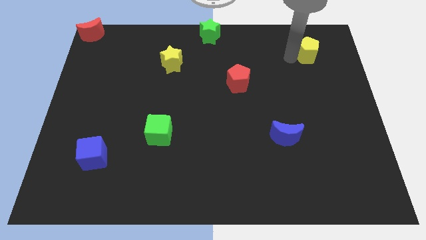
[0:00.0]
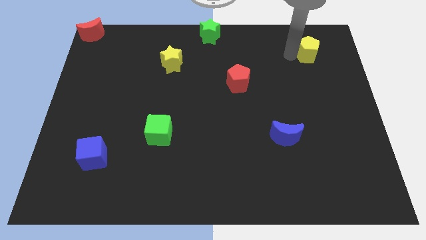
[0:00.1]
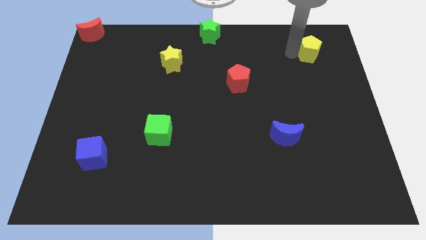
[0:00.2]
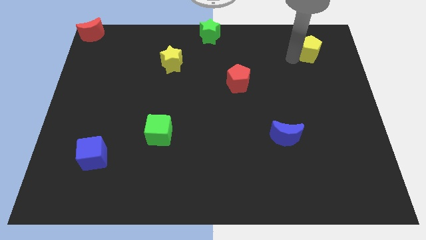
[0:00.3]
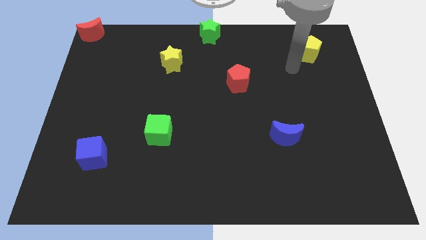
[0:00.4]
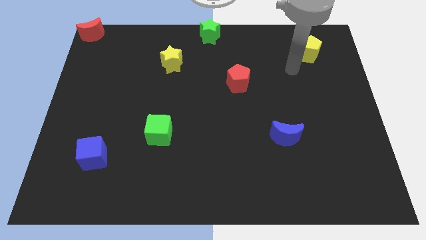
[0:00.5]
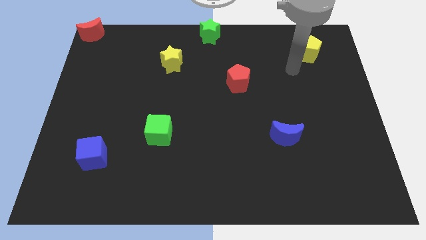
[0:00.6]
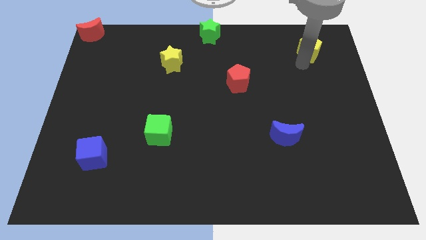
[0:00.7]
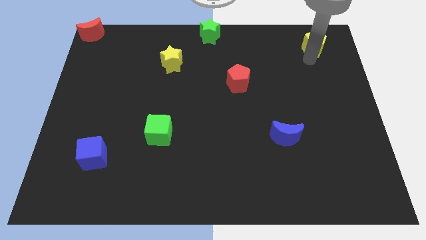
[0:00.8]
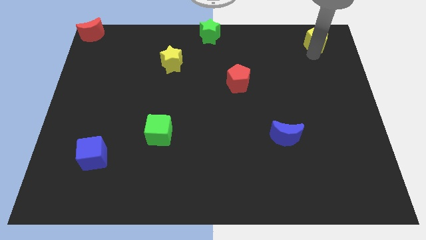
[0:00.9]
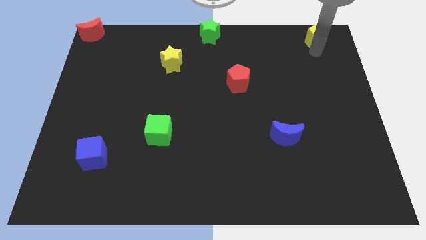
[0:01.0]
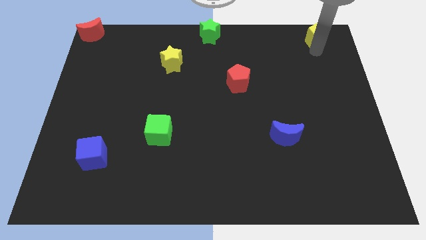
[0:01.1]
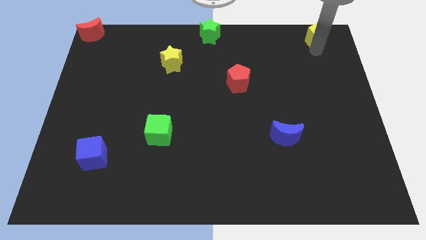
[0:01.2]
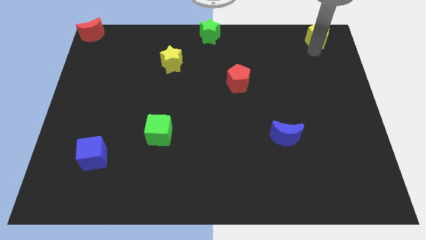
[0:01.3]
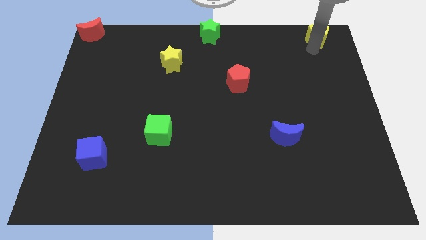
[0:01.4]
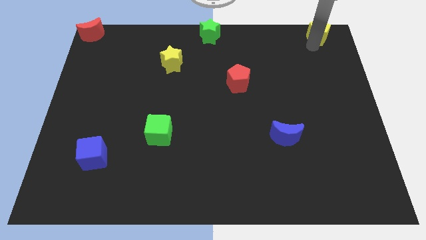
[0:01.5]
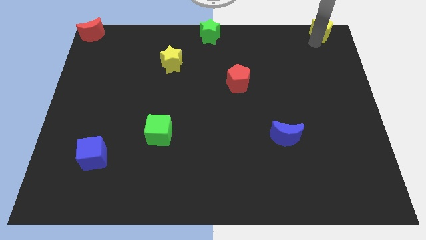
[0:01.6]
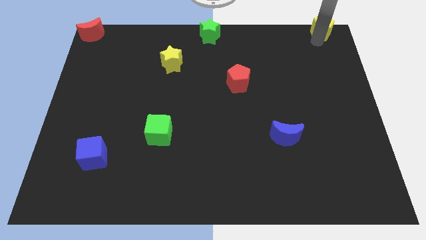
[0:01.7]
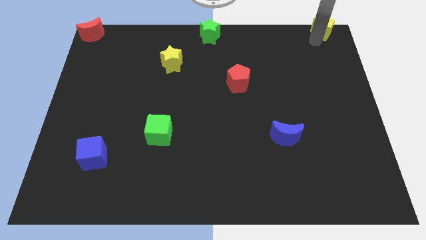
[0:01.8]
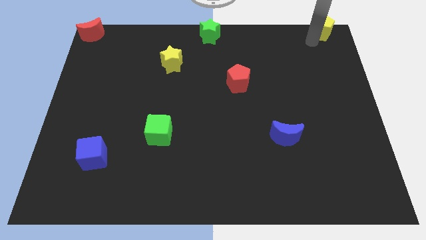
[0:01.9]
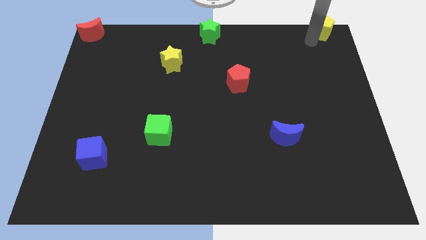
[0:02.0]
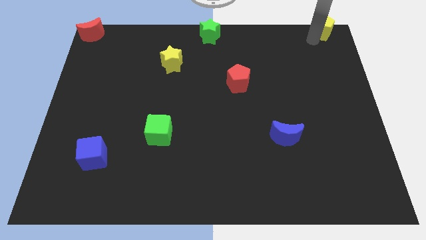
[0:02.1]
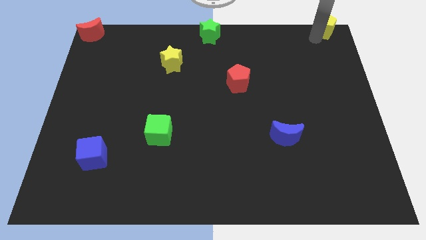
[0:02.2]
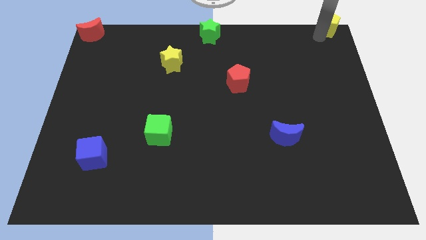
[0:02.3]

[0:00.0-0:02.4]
move the yellow pentagon to the top right corner

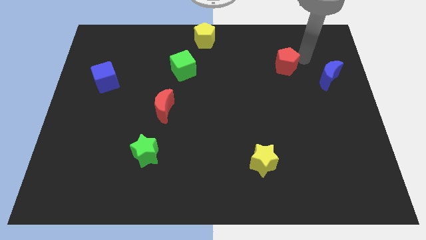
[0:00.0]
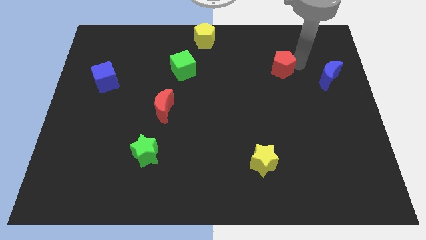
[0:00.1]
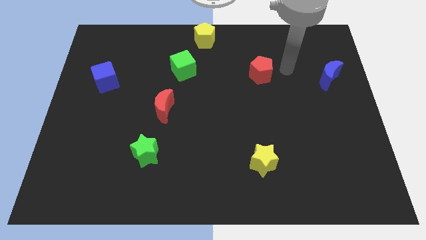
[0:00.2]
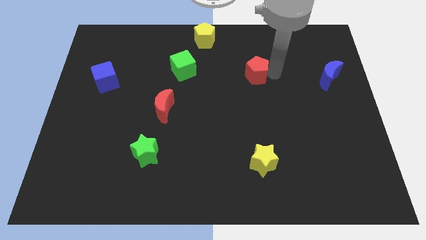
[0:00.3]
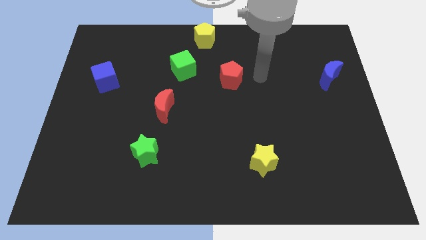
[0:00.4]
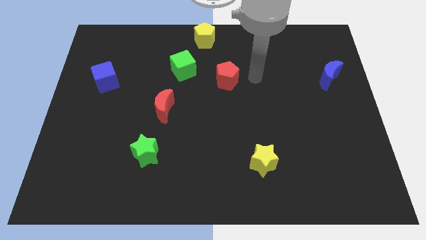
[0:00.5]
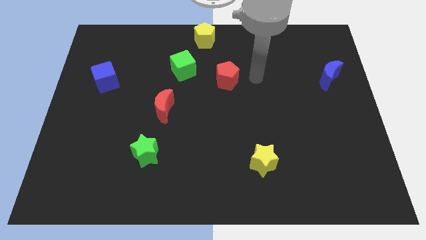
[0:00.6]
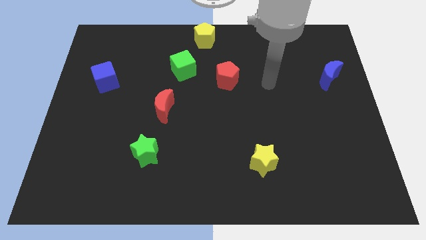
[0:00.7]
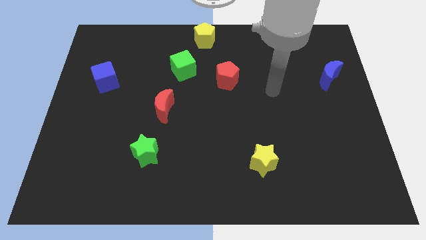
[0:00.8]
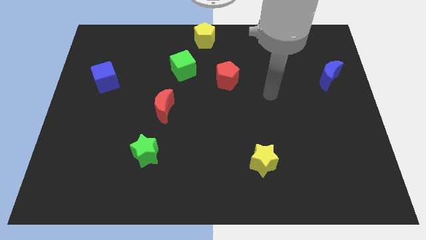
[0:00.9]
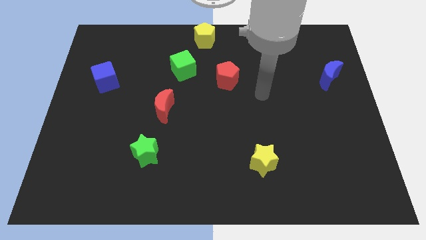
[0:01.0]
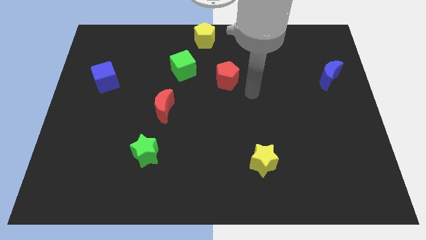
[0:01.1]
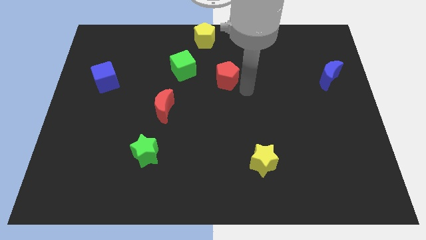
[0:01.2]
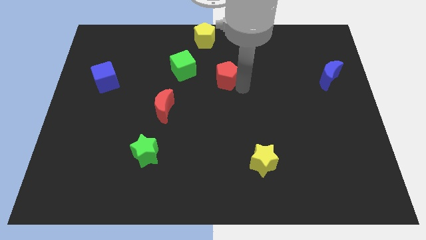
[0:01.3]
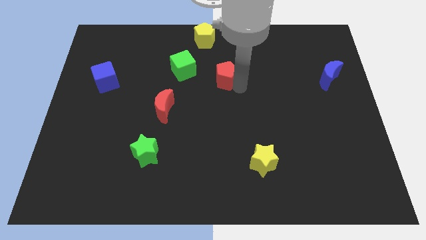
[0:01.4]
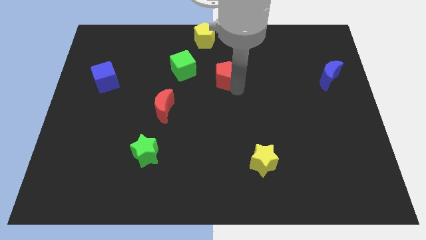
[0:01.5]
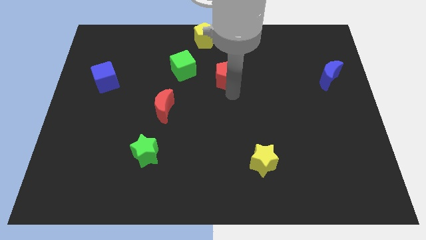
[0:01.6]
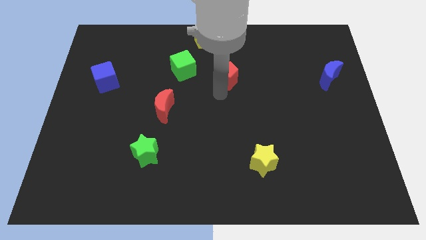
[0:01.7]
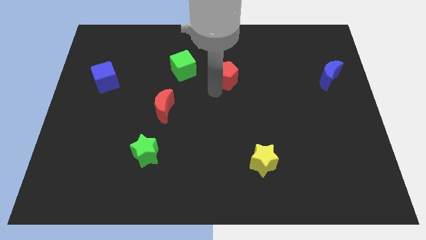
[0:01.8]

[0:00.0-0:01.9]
place the red pentagon at the right side of the green cube

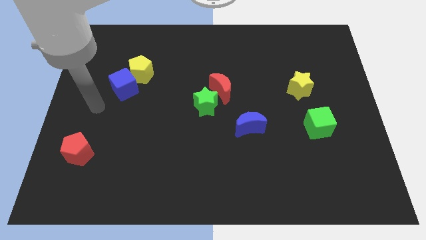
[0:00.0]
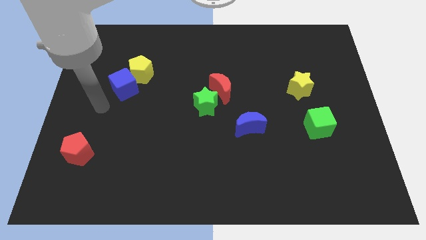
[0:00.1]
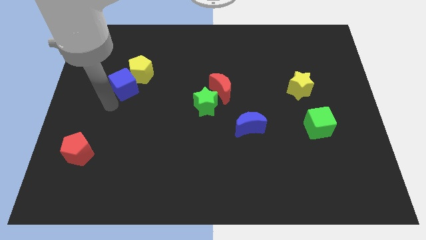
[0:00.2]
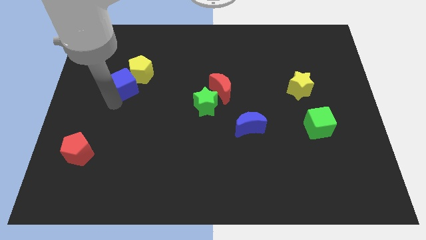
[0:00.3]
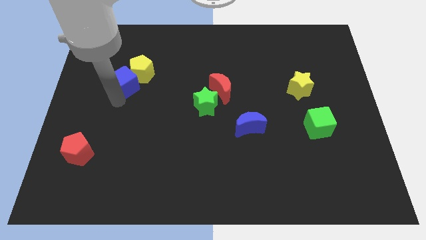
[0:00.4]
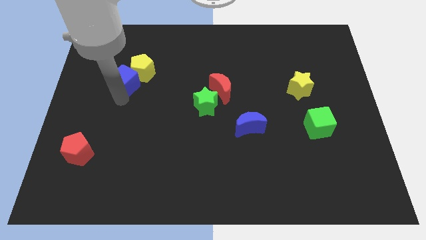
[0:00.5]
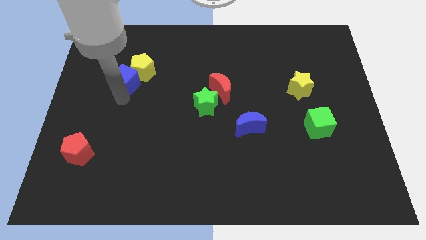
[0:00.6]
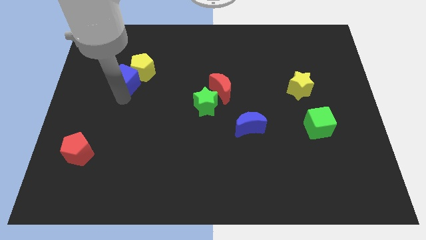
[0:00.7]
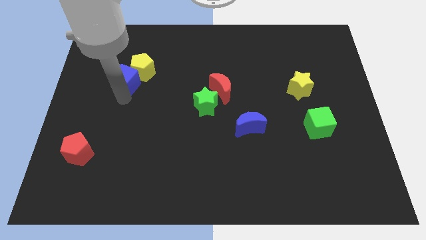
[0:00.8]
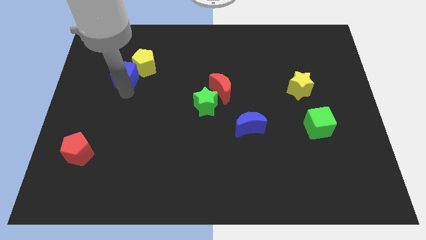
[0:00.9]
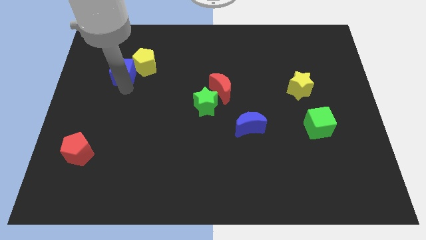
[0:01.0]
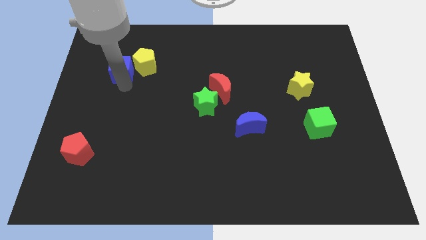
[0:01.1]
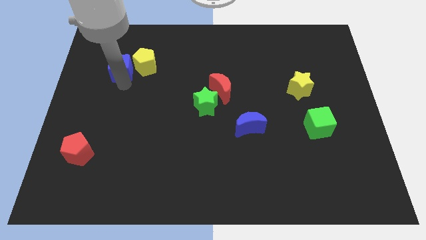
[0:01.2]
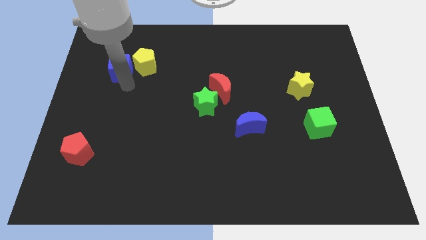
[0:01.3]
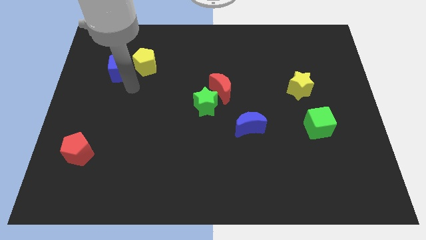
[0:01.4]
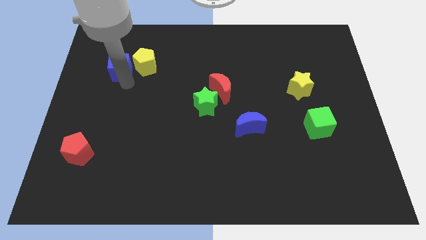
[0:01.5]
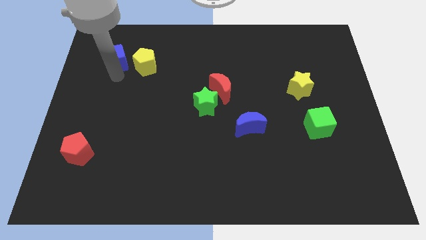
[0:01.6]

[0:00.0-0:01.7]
push the blue cube away from the yellow pentagon

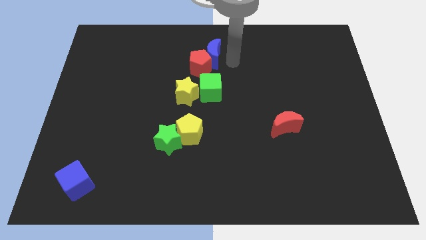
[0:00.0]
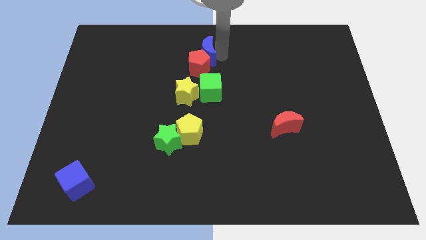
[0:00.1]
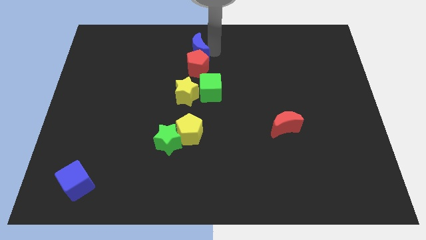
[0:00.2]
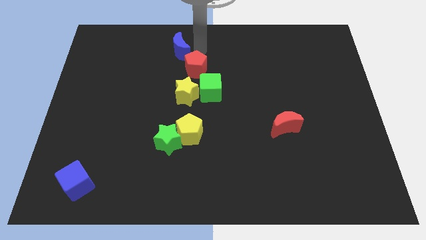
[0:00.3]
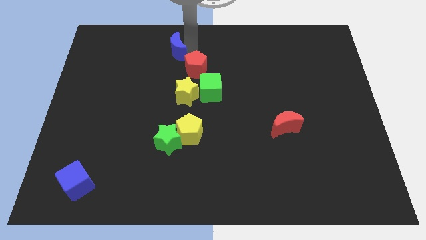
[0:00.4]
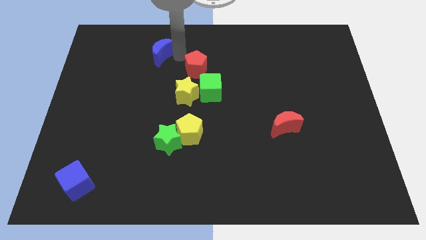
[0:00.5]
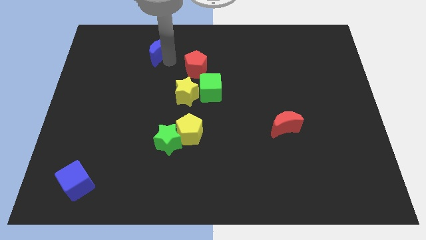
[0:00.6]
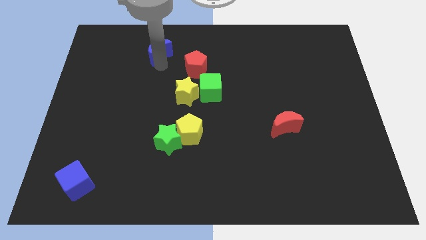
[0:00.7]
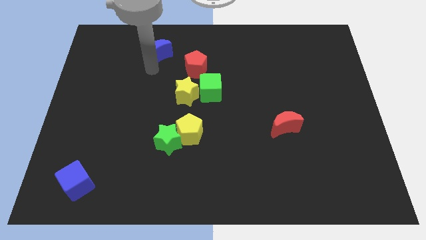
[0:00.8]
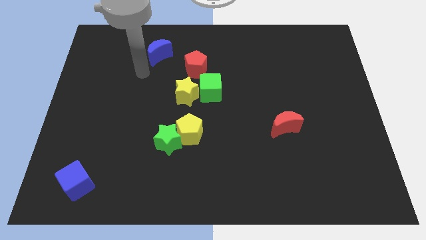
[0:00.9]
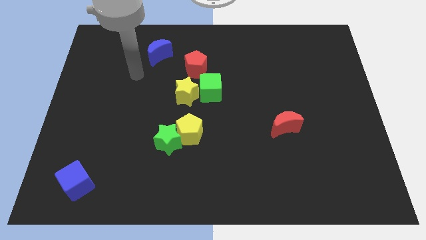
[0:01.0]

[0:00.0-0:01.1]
slide the blue moon away from the red pentagon

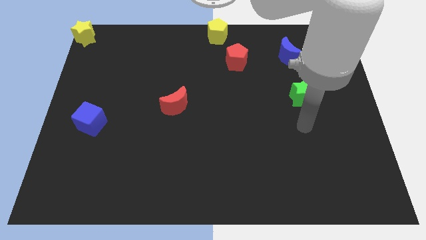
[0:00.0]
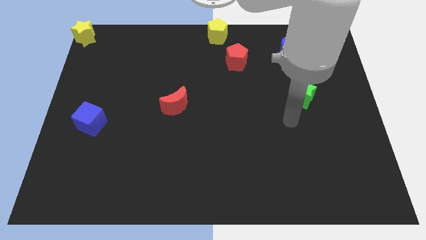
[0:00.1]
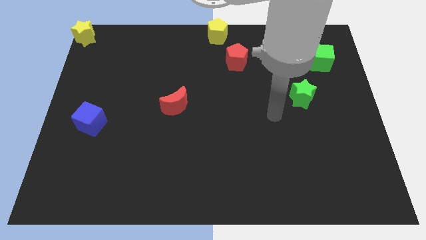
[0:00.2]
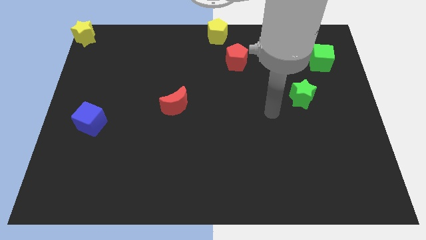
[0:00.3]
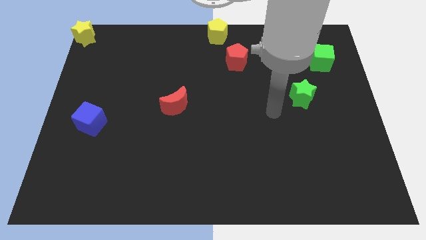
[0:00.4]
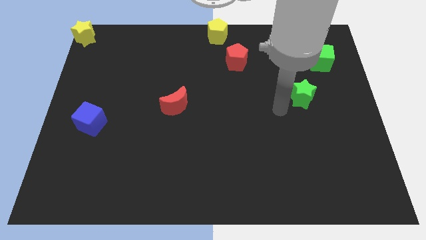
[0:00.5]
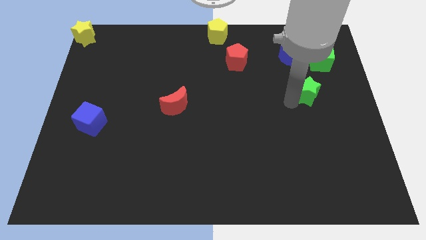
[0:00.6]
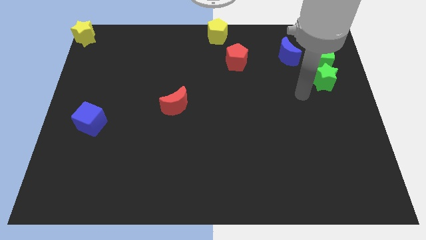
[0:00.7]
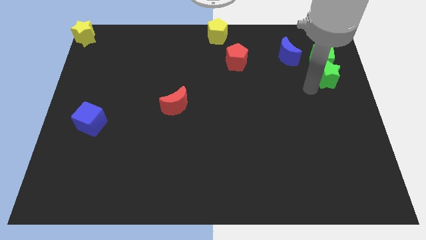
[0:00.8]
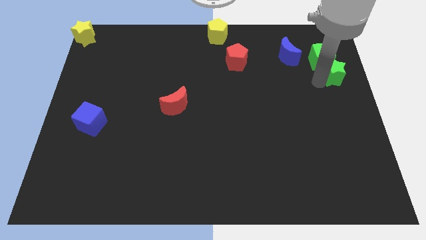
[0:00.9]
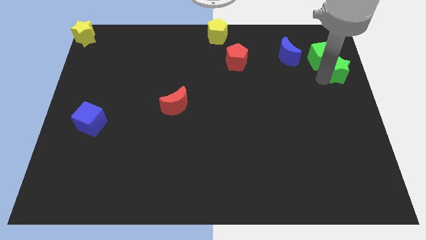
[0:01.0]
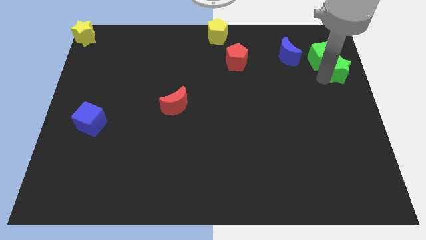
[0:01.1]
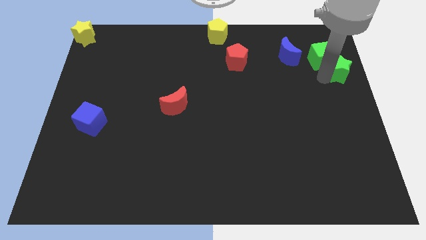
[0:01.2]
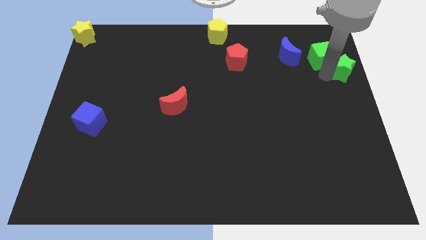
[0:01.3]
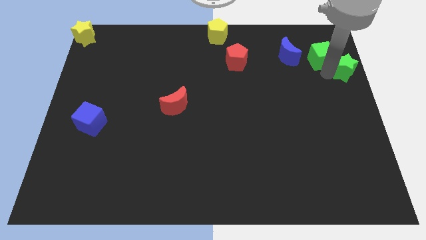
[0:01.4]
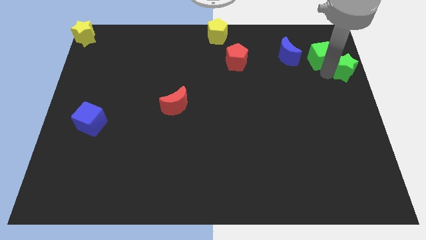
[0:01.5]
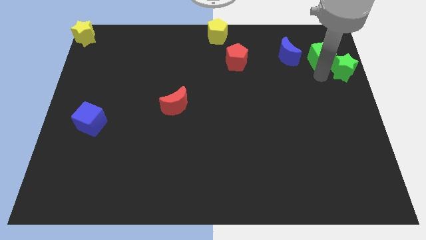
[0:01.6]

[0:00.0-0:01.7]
move the green star into the green cube
